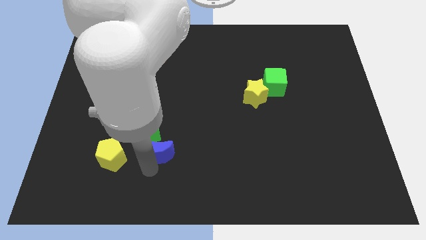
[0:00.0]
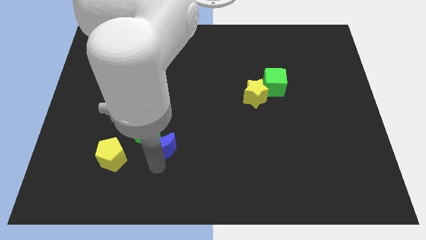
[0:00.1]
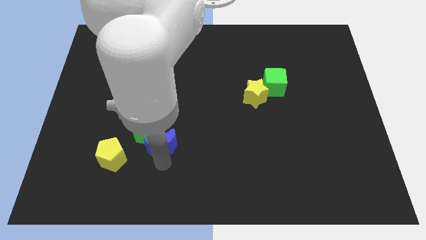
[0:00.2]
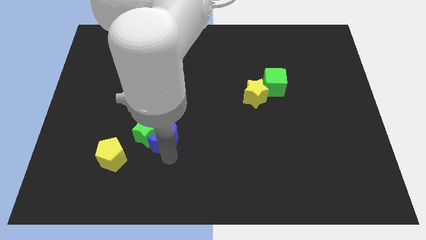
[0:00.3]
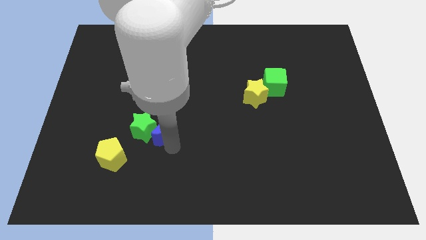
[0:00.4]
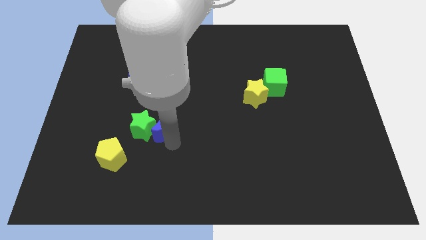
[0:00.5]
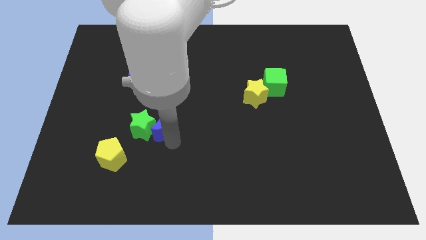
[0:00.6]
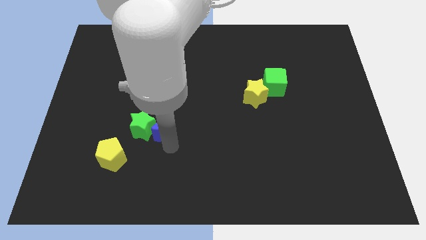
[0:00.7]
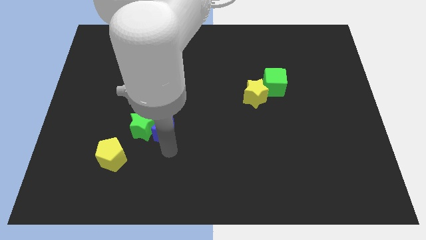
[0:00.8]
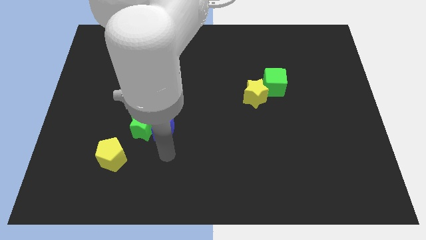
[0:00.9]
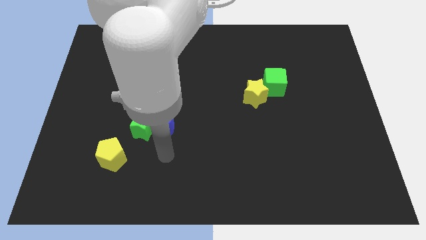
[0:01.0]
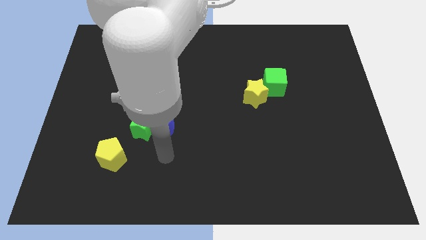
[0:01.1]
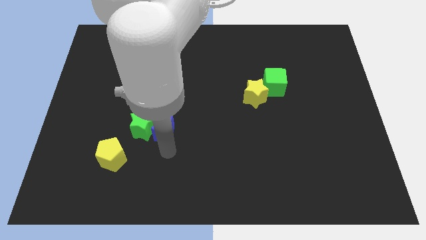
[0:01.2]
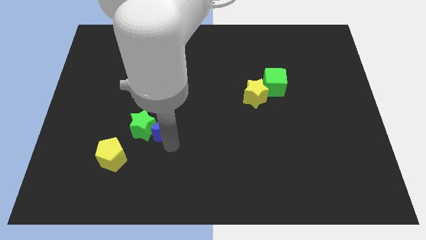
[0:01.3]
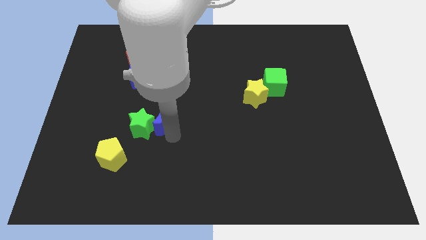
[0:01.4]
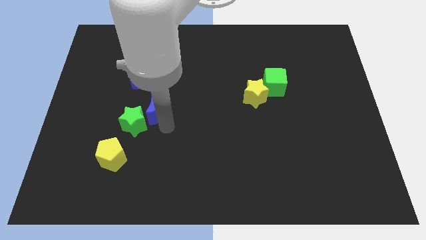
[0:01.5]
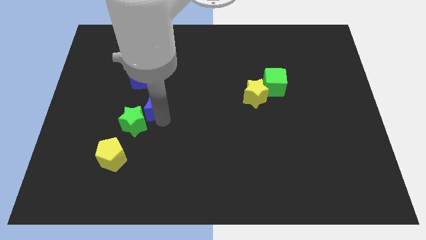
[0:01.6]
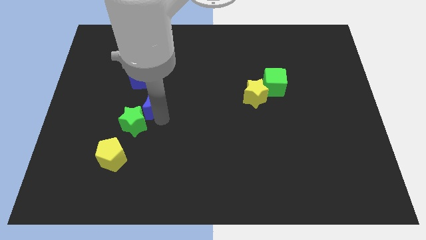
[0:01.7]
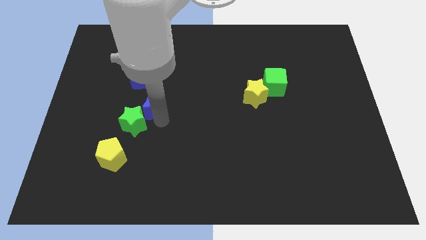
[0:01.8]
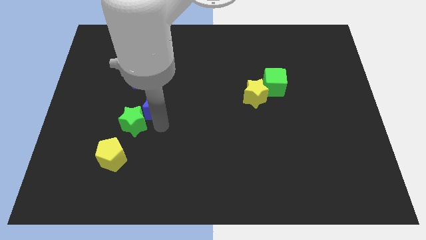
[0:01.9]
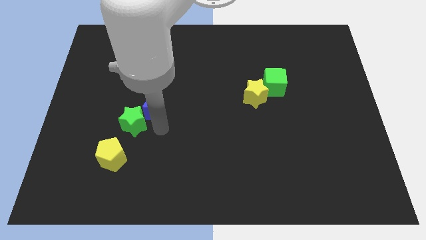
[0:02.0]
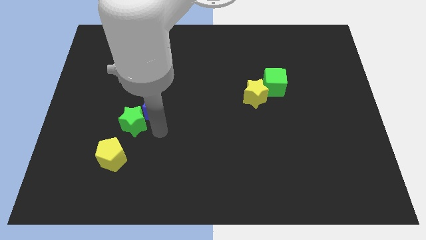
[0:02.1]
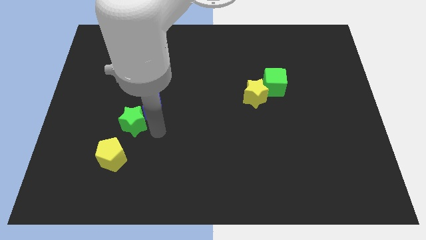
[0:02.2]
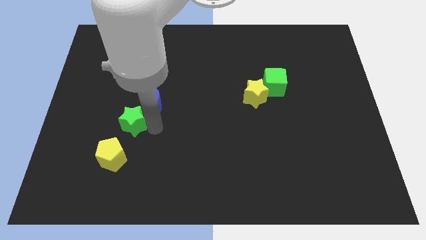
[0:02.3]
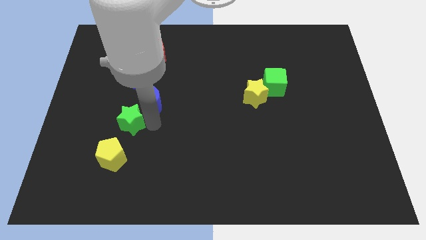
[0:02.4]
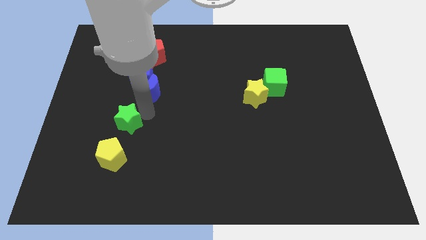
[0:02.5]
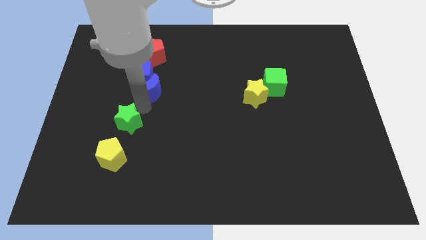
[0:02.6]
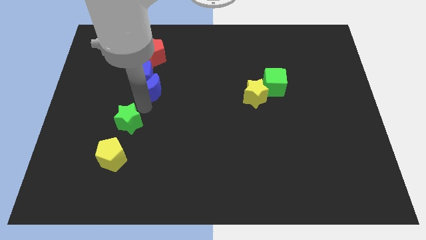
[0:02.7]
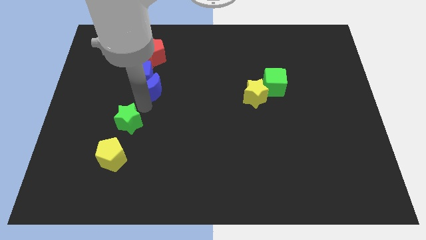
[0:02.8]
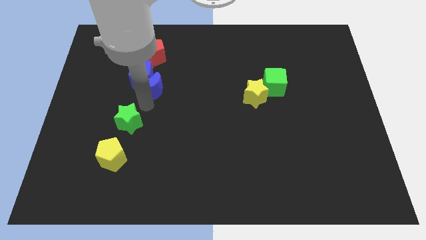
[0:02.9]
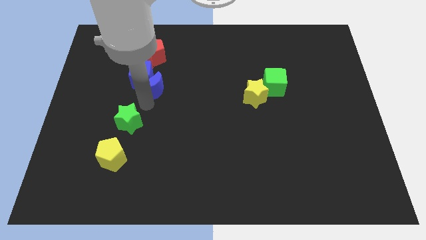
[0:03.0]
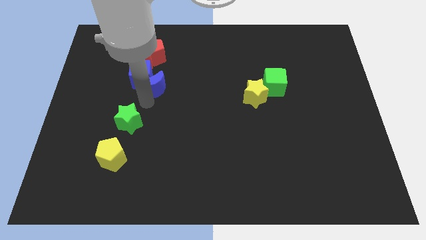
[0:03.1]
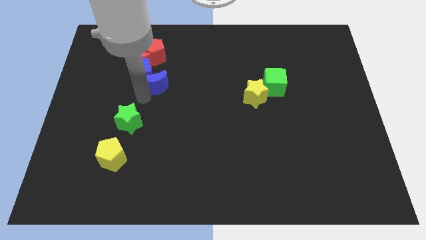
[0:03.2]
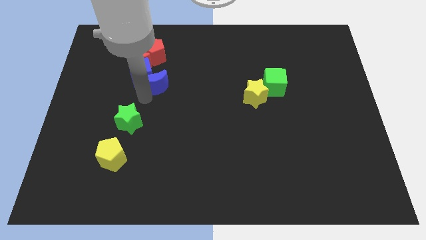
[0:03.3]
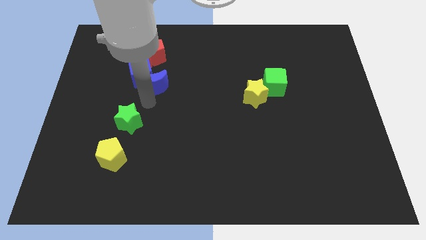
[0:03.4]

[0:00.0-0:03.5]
separate the green star and blue moon

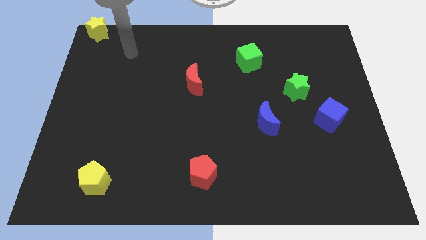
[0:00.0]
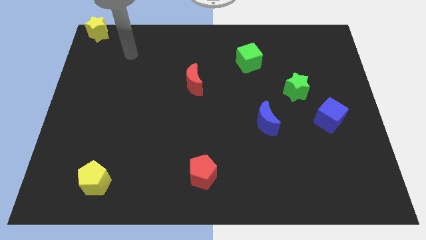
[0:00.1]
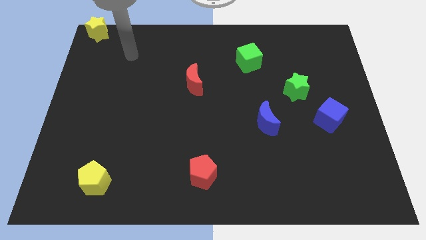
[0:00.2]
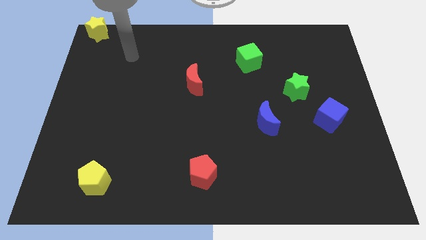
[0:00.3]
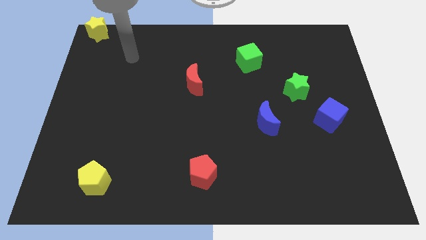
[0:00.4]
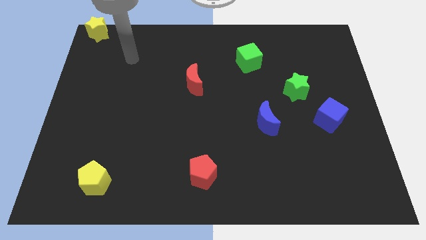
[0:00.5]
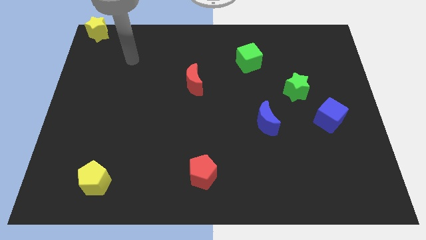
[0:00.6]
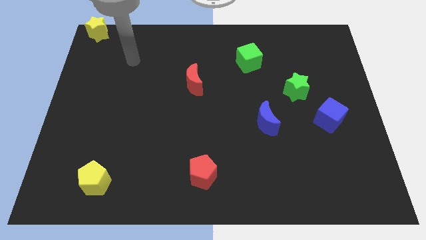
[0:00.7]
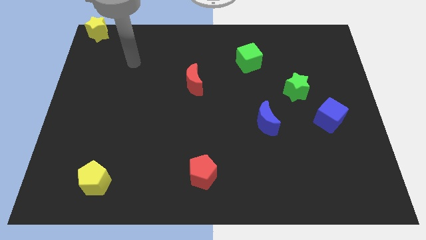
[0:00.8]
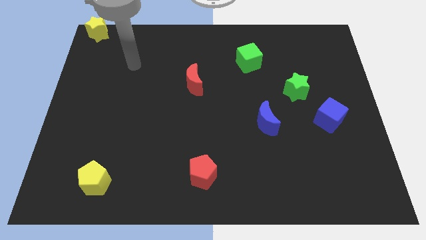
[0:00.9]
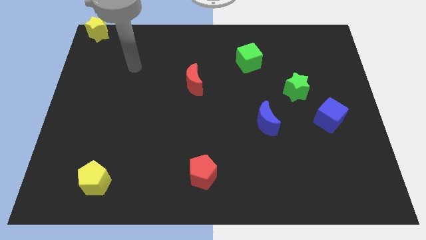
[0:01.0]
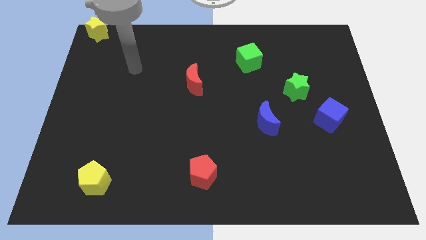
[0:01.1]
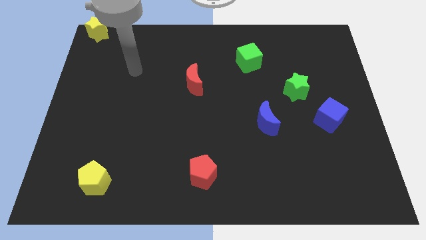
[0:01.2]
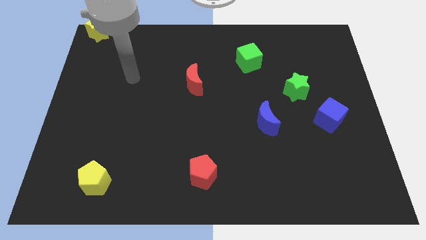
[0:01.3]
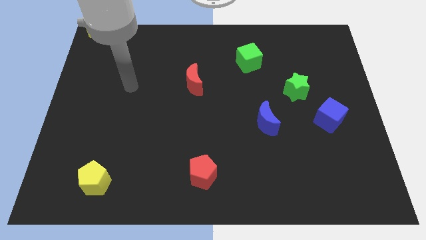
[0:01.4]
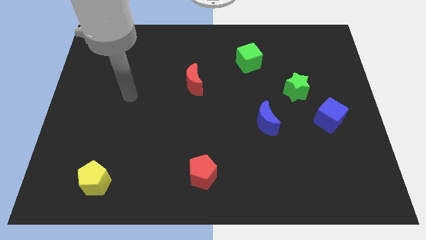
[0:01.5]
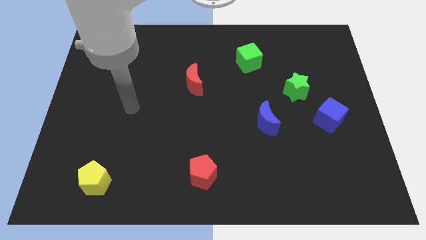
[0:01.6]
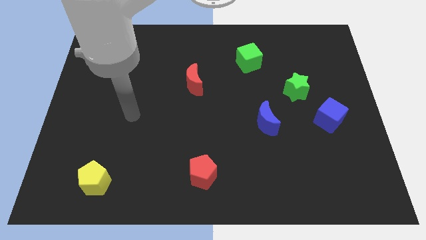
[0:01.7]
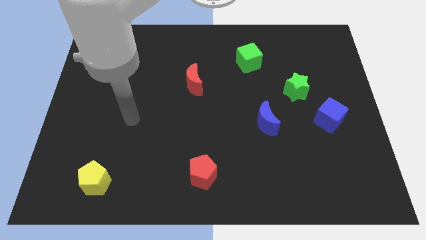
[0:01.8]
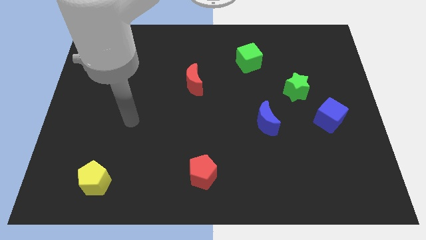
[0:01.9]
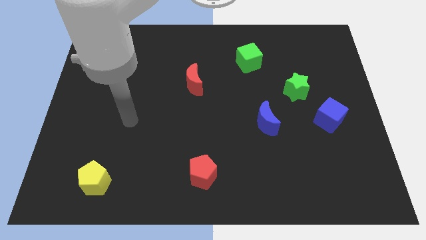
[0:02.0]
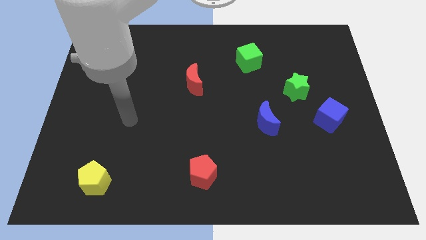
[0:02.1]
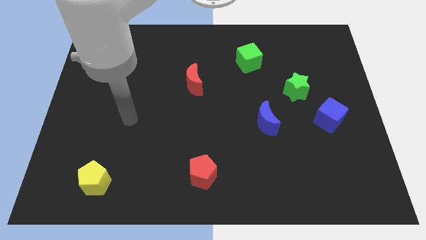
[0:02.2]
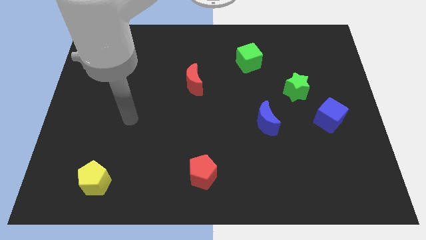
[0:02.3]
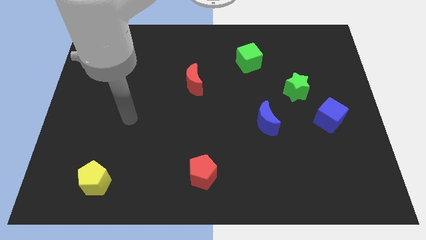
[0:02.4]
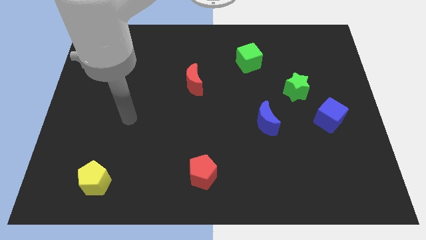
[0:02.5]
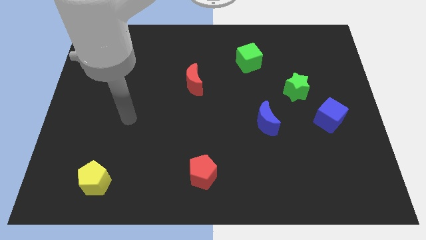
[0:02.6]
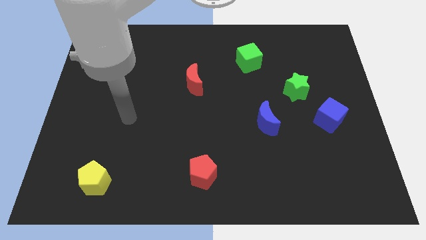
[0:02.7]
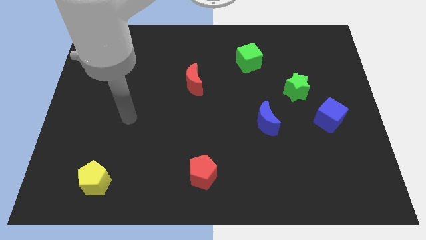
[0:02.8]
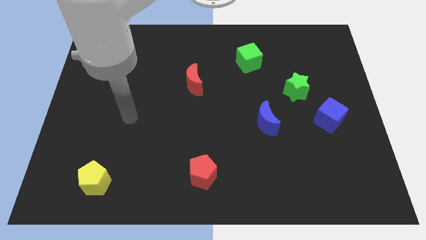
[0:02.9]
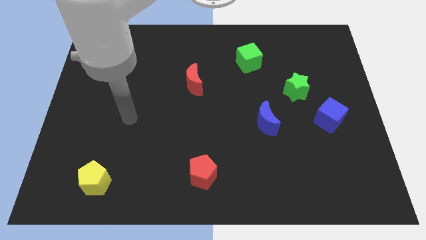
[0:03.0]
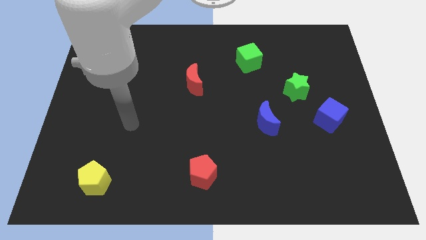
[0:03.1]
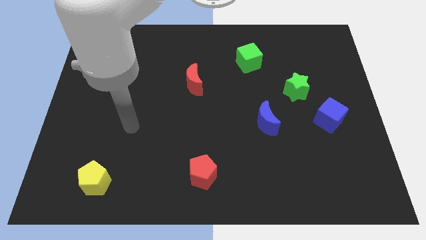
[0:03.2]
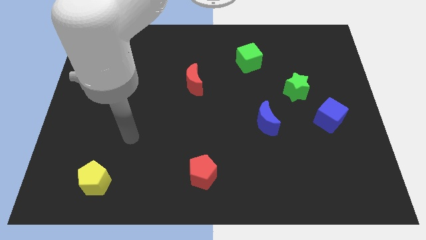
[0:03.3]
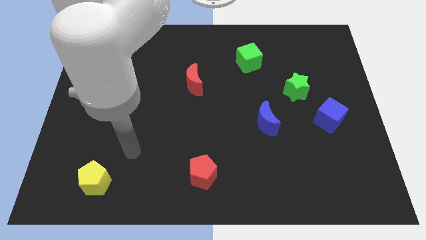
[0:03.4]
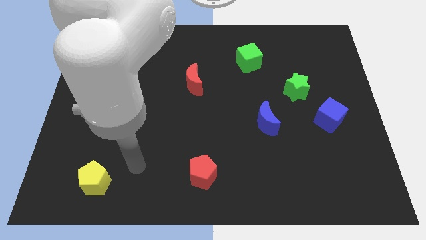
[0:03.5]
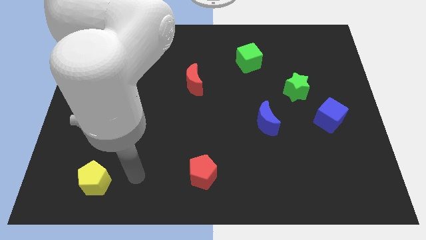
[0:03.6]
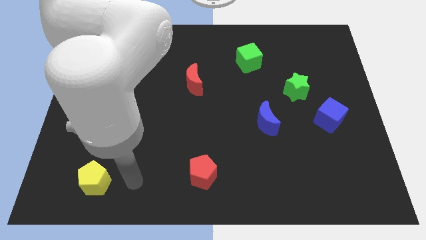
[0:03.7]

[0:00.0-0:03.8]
point the arm at the right side of the yellow pentagon

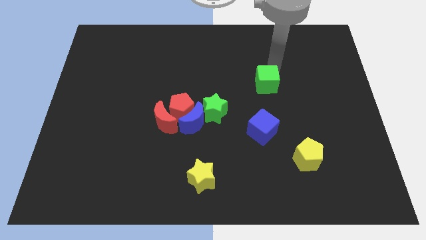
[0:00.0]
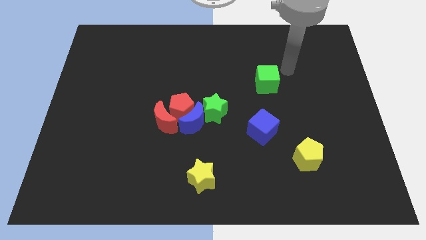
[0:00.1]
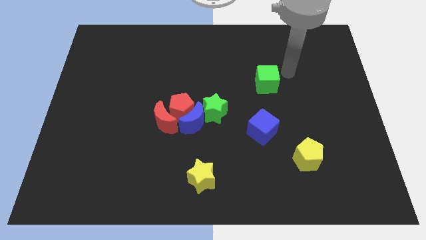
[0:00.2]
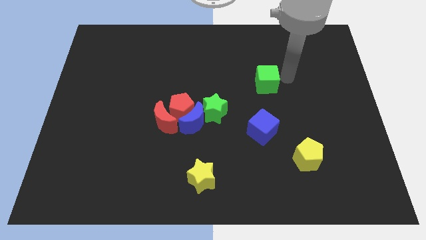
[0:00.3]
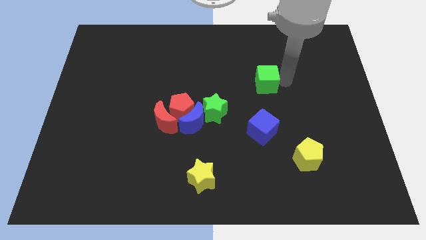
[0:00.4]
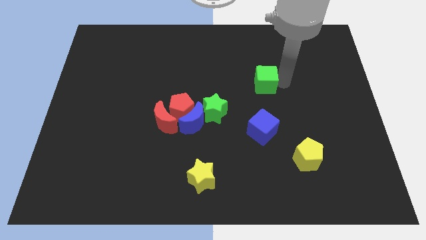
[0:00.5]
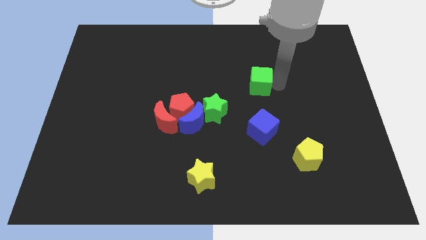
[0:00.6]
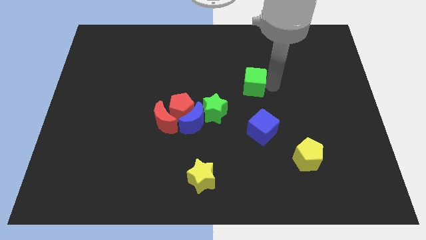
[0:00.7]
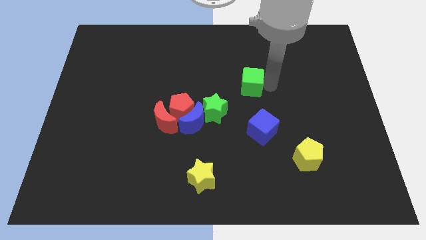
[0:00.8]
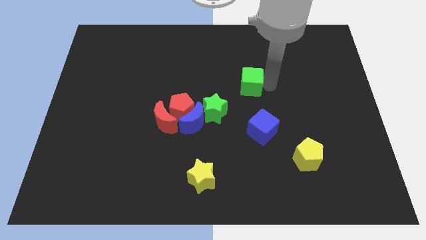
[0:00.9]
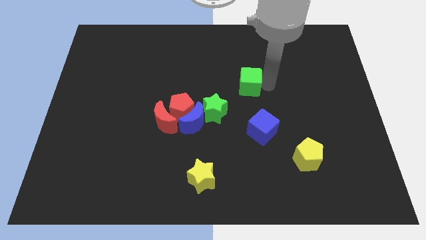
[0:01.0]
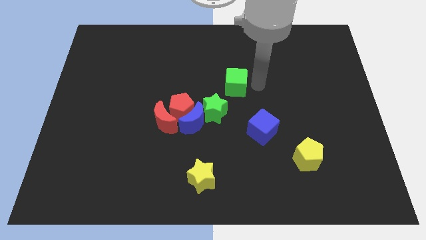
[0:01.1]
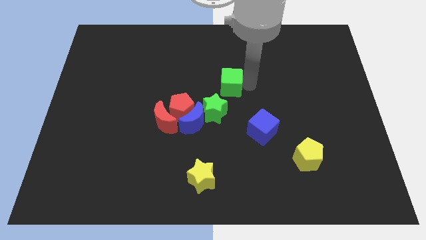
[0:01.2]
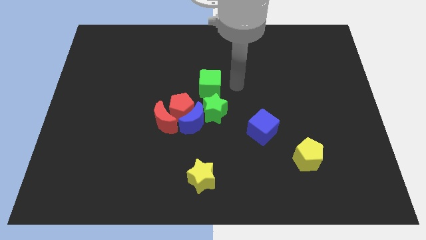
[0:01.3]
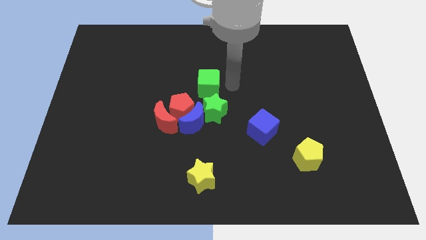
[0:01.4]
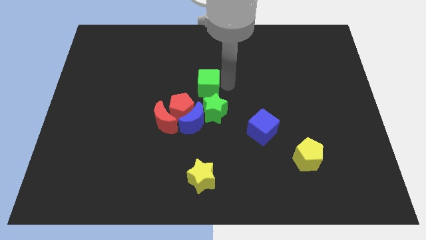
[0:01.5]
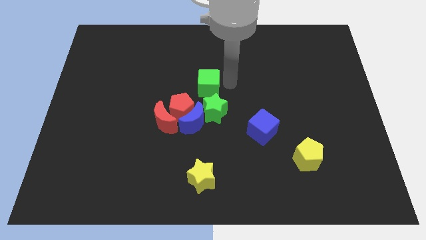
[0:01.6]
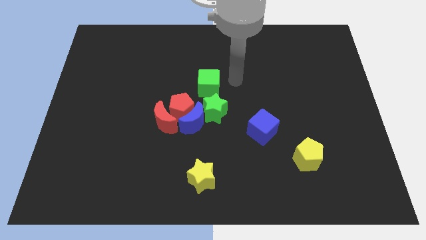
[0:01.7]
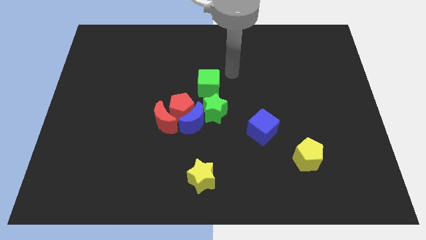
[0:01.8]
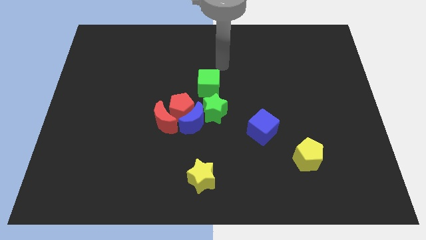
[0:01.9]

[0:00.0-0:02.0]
put the green cube on top of green star
